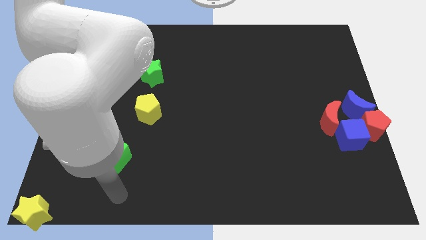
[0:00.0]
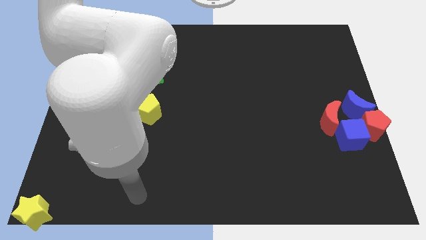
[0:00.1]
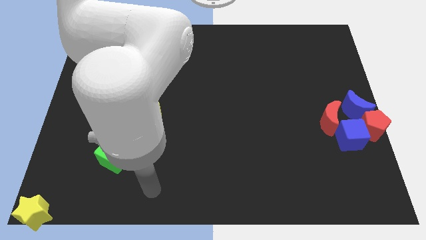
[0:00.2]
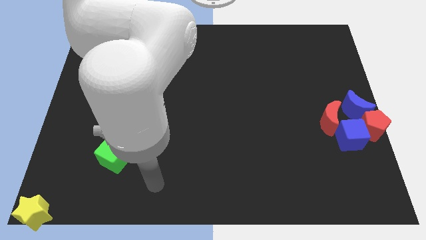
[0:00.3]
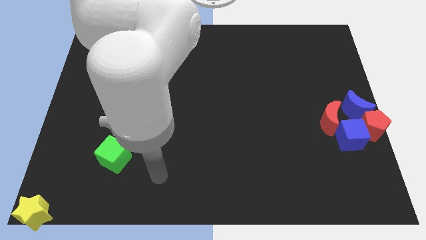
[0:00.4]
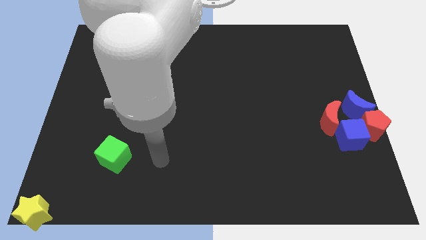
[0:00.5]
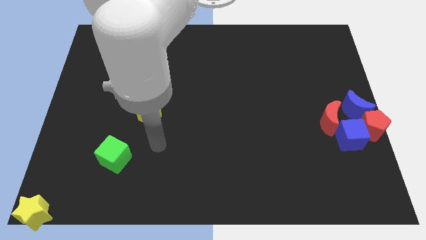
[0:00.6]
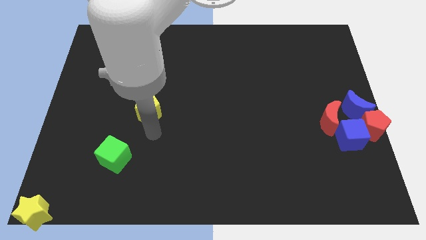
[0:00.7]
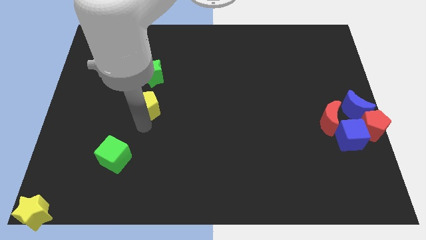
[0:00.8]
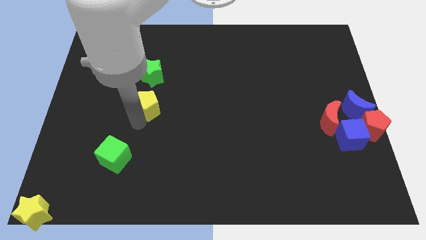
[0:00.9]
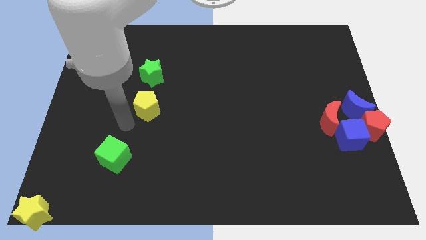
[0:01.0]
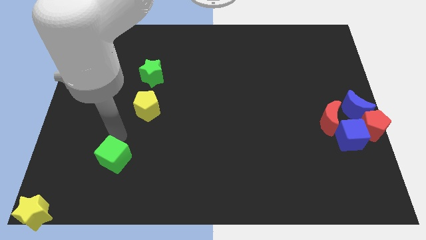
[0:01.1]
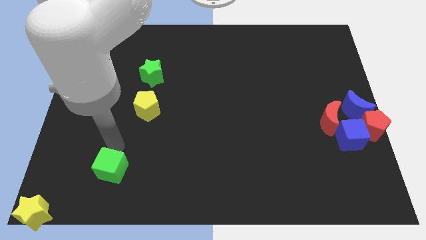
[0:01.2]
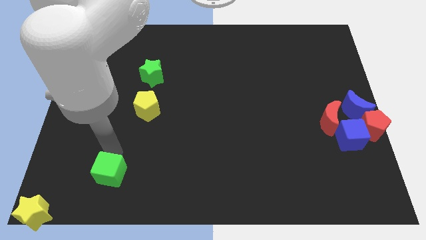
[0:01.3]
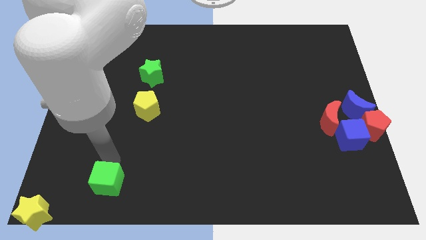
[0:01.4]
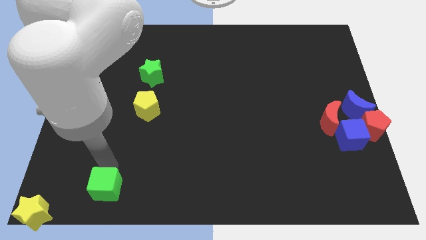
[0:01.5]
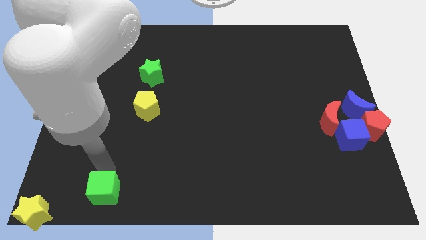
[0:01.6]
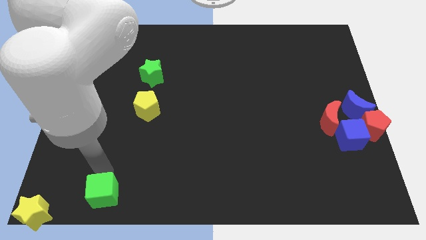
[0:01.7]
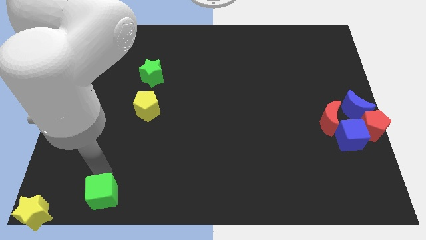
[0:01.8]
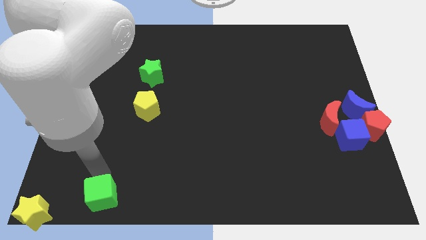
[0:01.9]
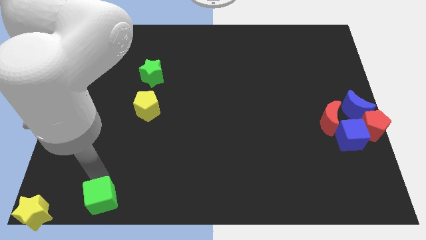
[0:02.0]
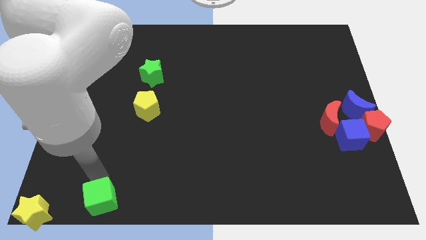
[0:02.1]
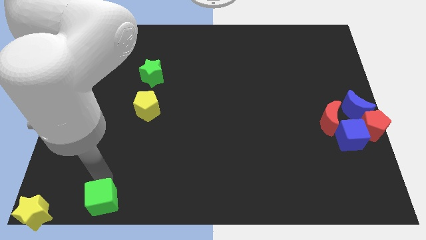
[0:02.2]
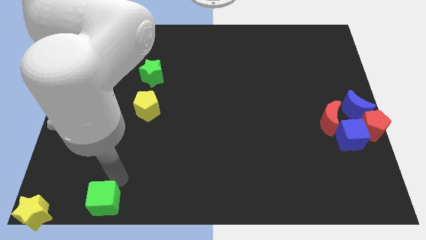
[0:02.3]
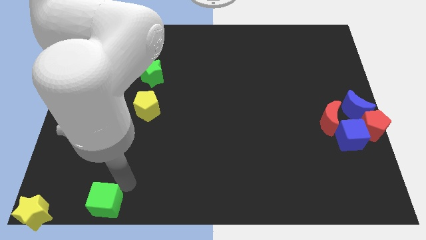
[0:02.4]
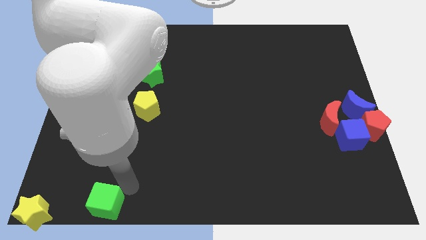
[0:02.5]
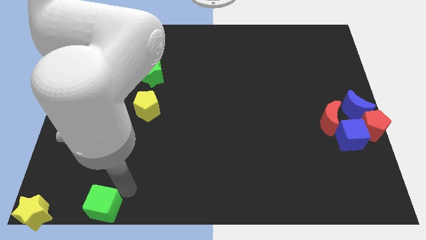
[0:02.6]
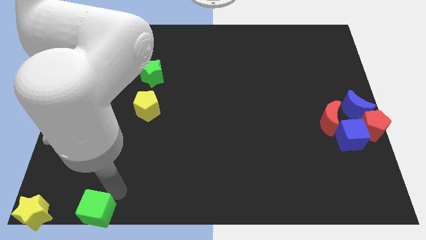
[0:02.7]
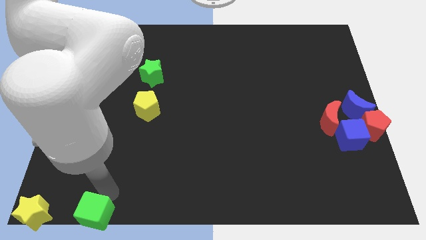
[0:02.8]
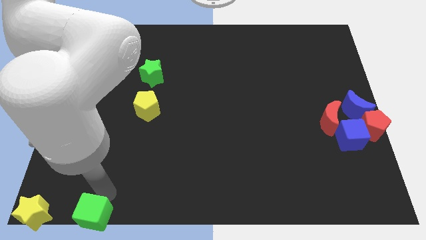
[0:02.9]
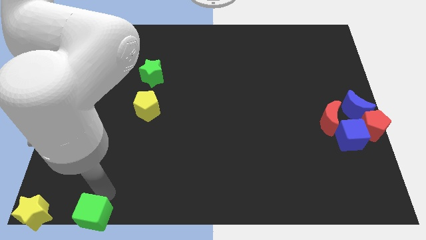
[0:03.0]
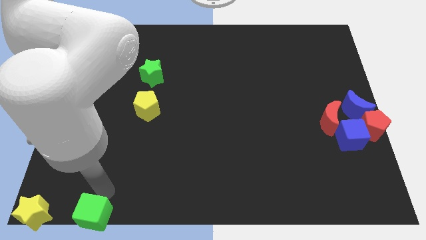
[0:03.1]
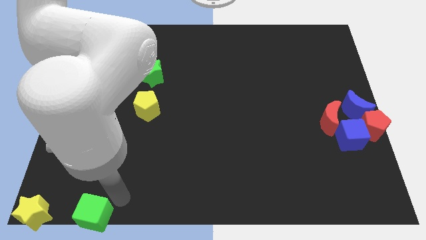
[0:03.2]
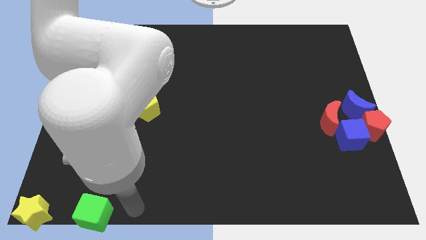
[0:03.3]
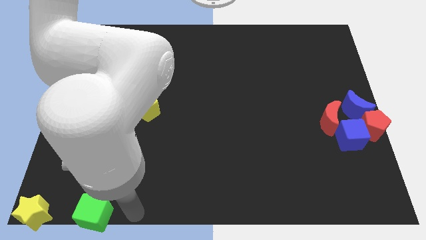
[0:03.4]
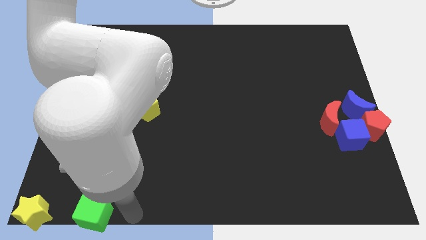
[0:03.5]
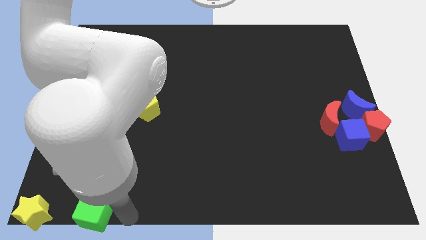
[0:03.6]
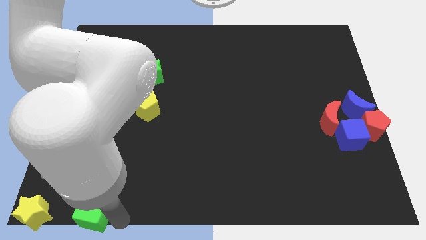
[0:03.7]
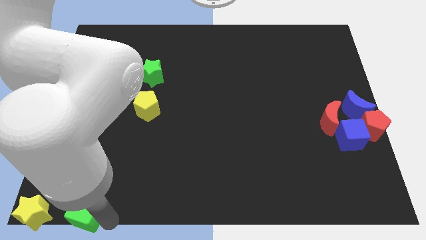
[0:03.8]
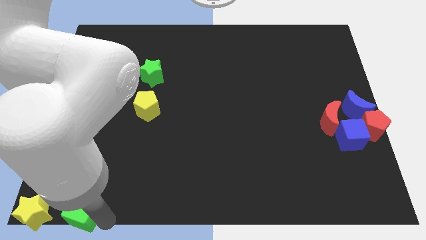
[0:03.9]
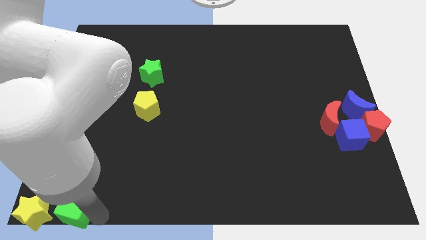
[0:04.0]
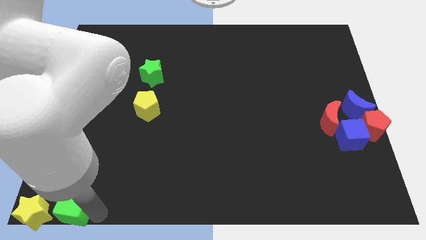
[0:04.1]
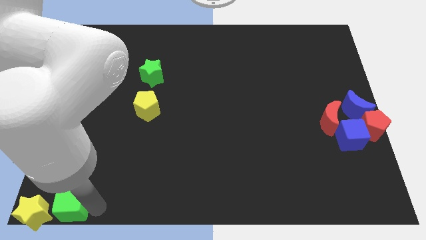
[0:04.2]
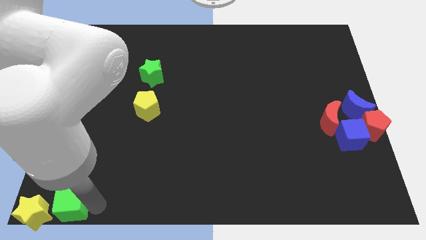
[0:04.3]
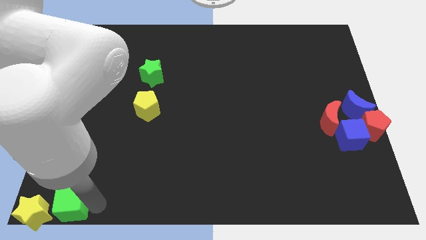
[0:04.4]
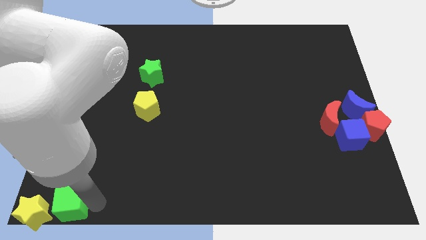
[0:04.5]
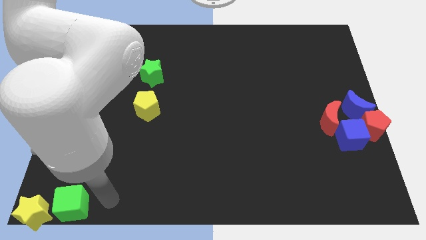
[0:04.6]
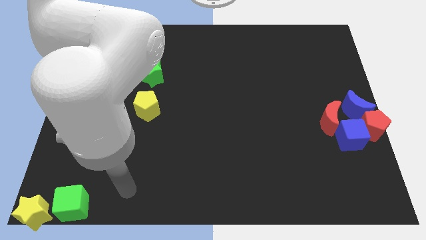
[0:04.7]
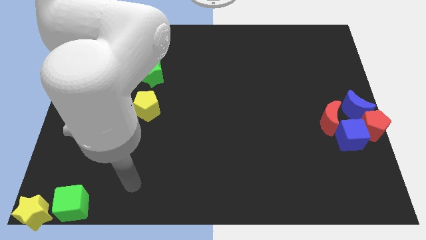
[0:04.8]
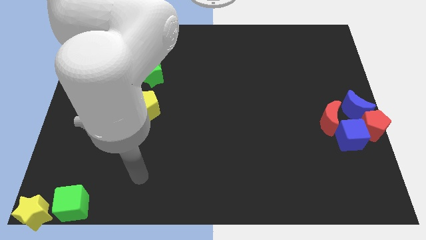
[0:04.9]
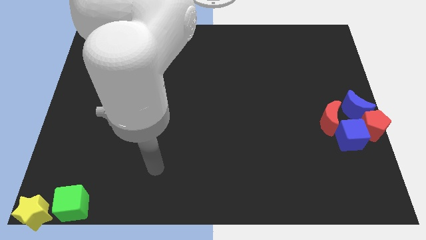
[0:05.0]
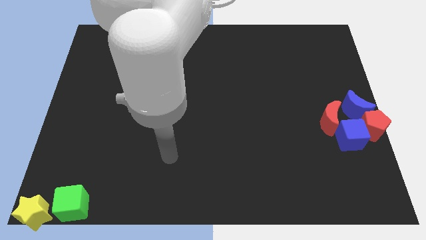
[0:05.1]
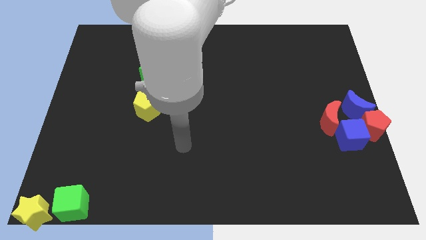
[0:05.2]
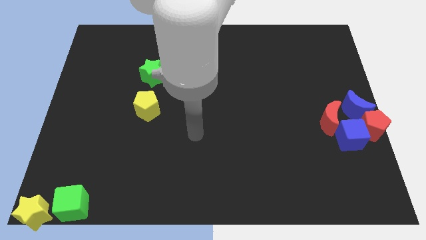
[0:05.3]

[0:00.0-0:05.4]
place the green cube to the right of the yellow star

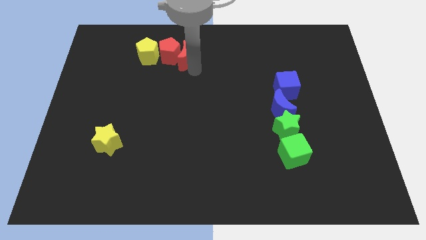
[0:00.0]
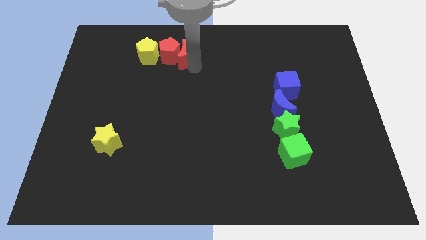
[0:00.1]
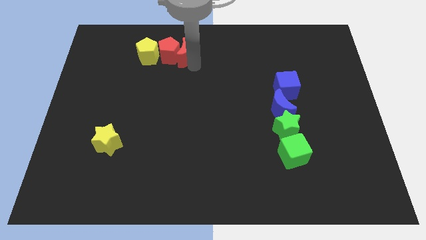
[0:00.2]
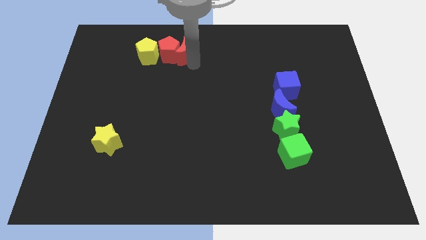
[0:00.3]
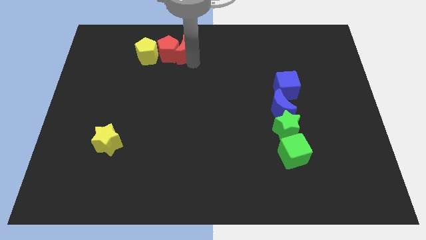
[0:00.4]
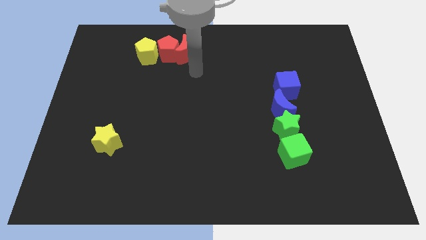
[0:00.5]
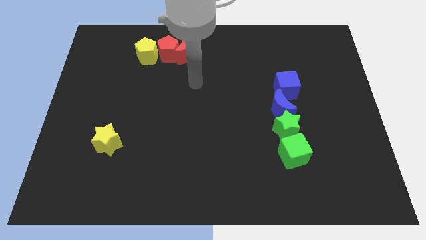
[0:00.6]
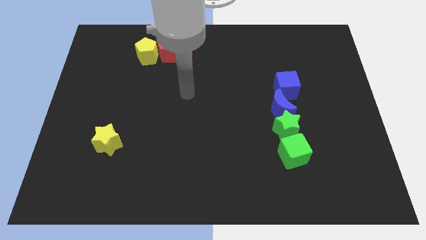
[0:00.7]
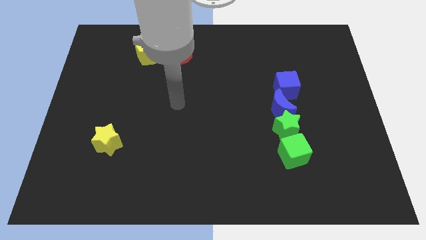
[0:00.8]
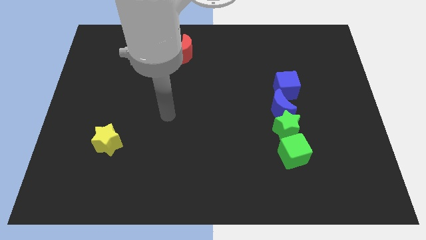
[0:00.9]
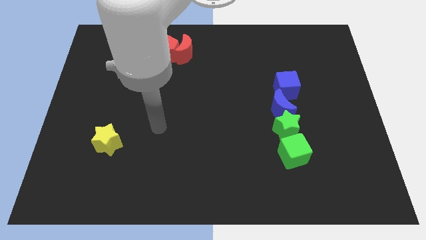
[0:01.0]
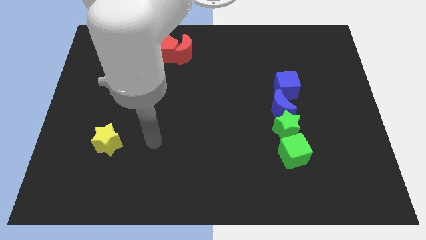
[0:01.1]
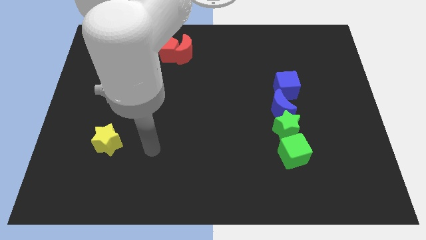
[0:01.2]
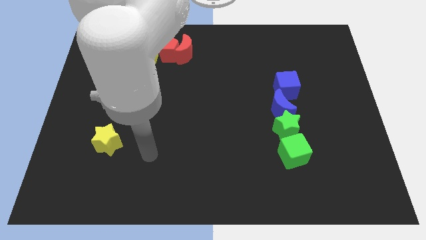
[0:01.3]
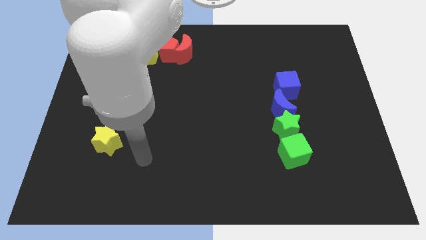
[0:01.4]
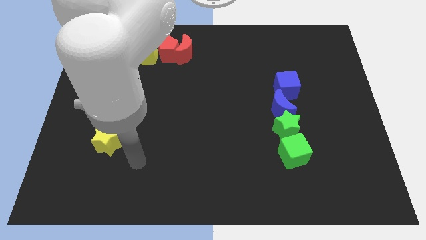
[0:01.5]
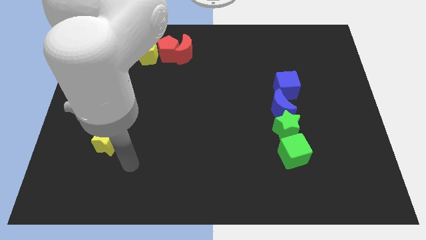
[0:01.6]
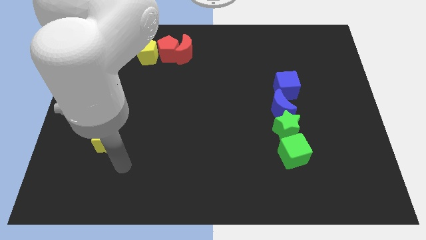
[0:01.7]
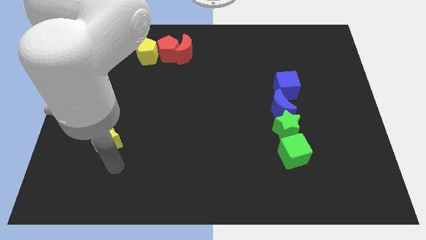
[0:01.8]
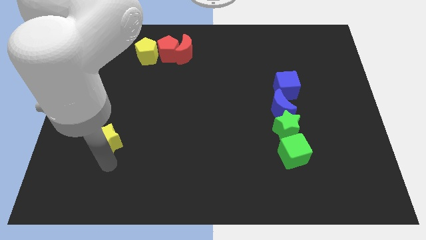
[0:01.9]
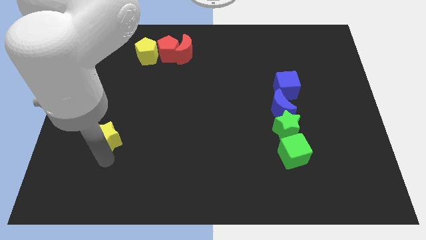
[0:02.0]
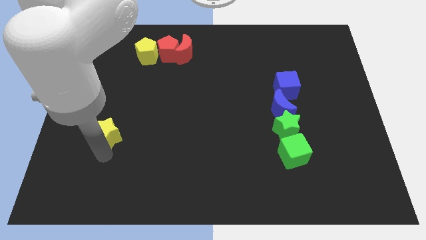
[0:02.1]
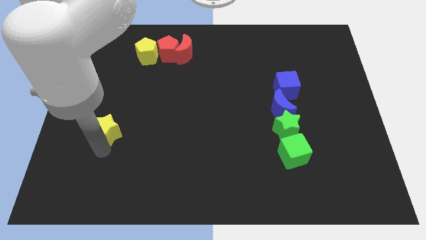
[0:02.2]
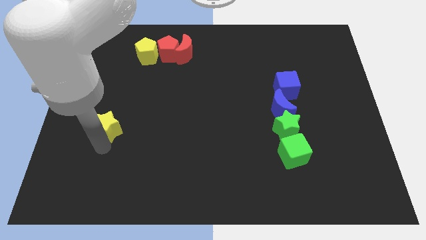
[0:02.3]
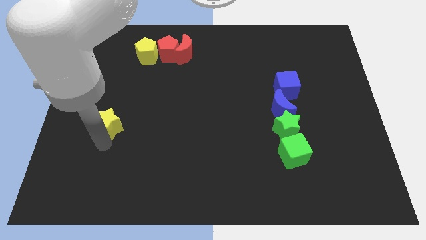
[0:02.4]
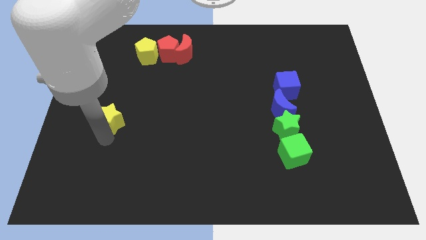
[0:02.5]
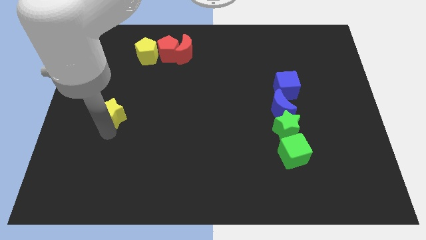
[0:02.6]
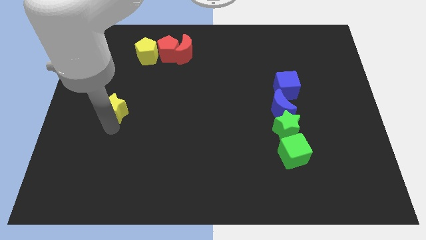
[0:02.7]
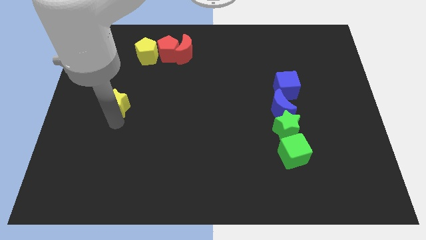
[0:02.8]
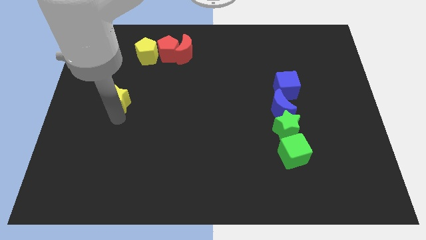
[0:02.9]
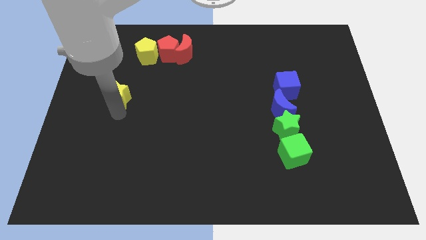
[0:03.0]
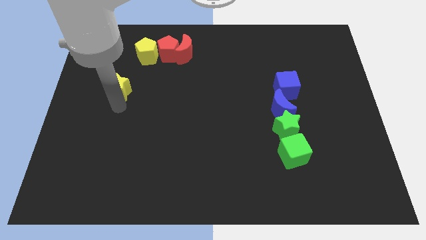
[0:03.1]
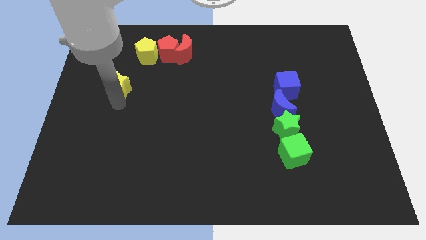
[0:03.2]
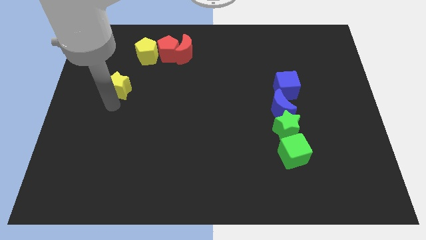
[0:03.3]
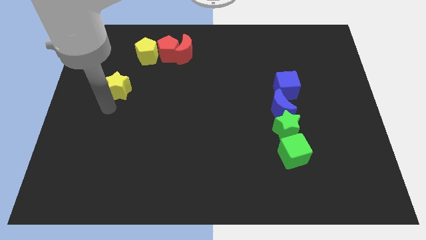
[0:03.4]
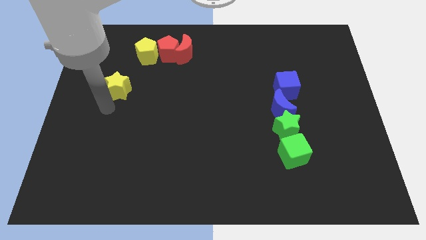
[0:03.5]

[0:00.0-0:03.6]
drag the yellow star towards the top left
